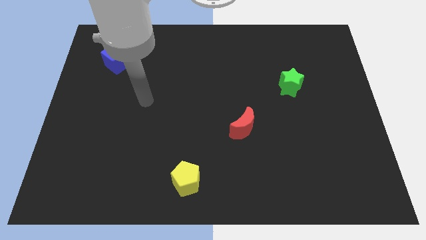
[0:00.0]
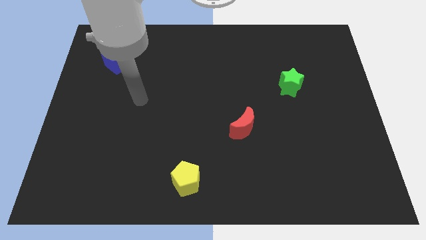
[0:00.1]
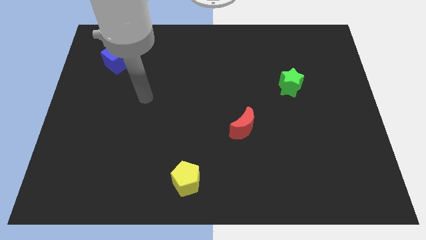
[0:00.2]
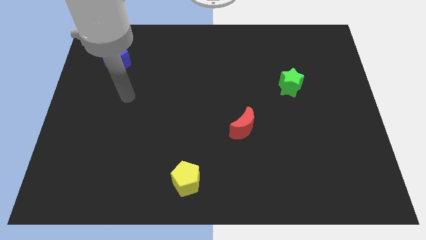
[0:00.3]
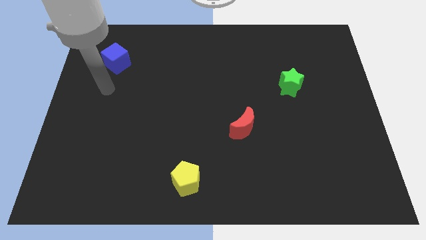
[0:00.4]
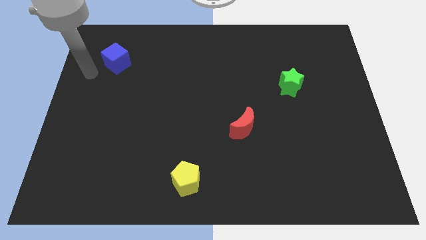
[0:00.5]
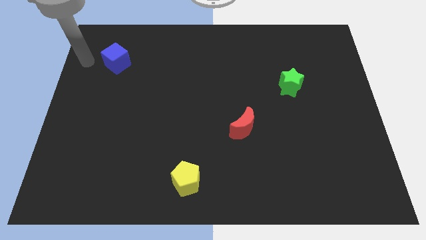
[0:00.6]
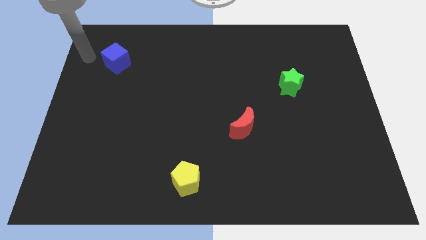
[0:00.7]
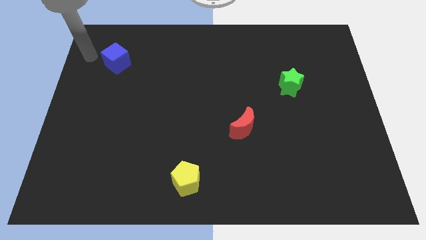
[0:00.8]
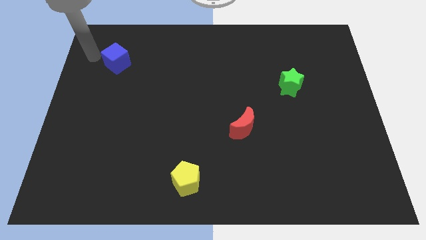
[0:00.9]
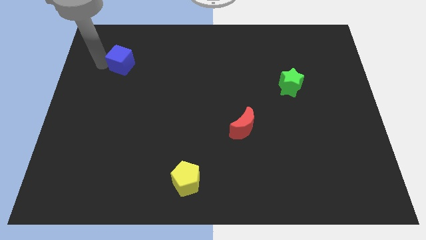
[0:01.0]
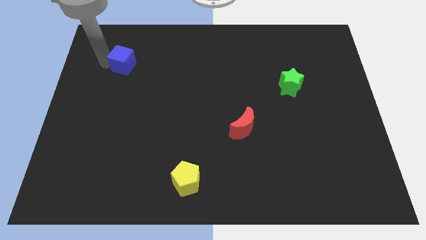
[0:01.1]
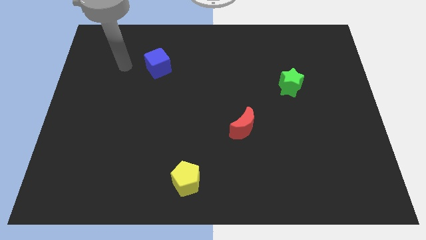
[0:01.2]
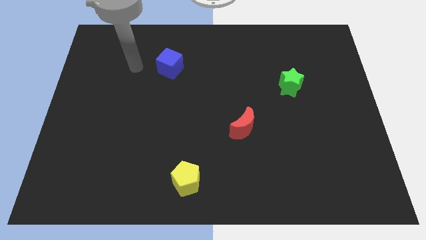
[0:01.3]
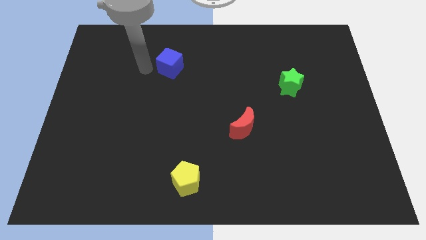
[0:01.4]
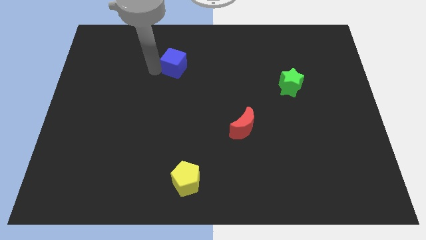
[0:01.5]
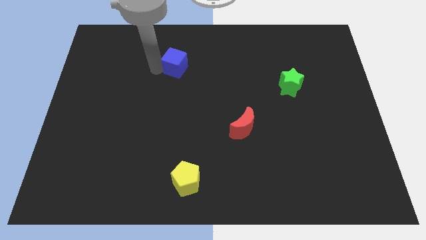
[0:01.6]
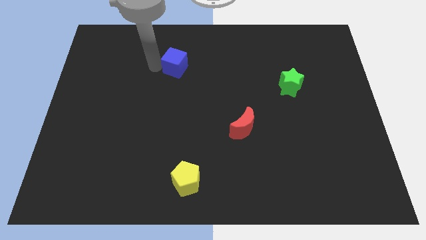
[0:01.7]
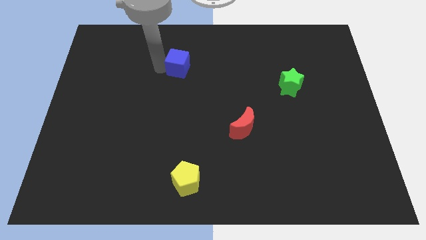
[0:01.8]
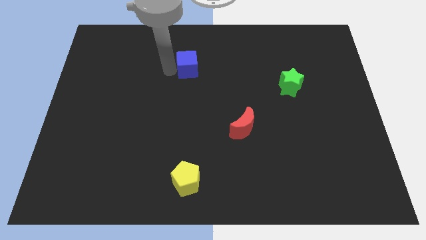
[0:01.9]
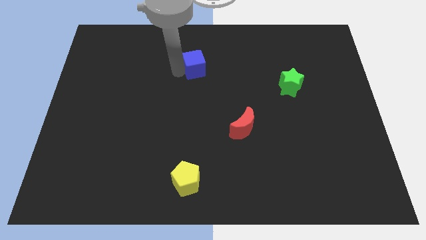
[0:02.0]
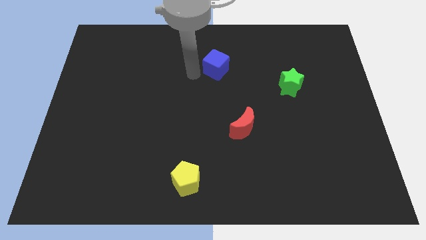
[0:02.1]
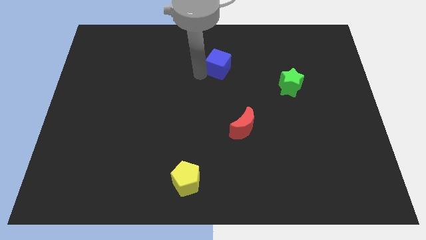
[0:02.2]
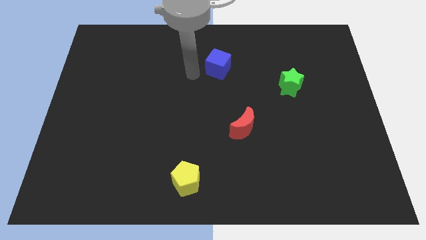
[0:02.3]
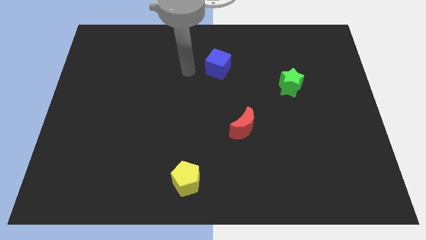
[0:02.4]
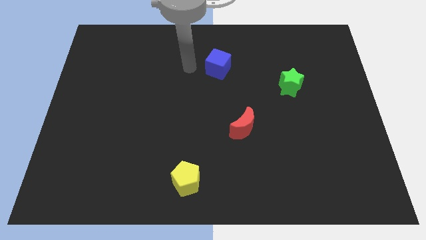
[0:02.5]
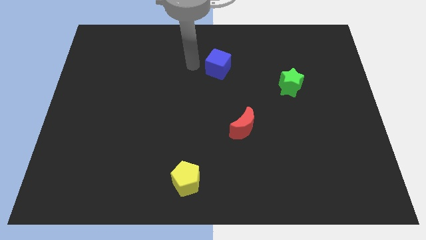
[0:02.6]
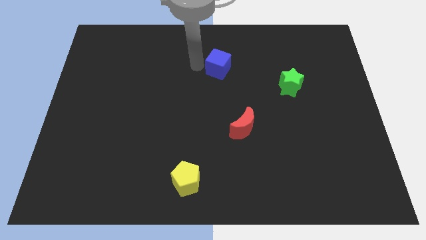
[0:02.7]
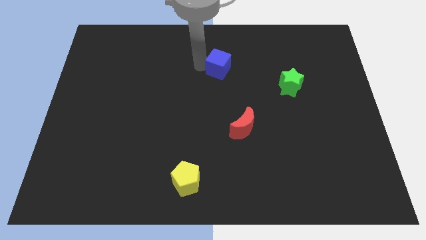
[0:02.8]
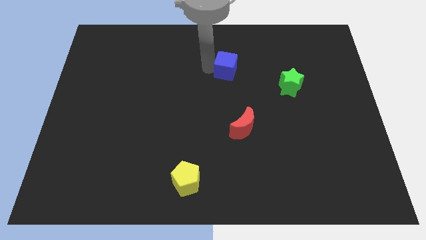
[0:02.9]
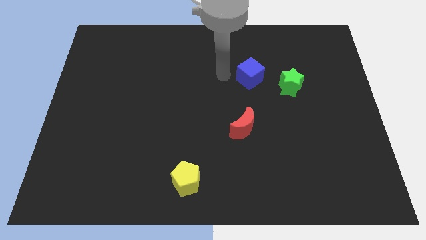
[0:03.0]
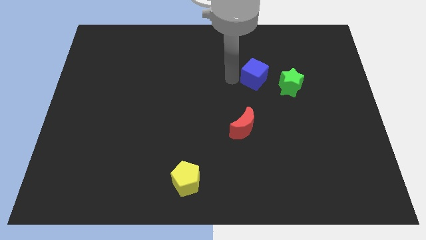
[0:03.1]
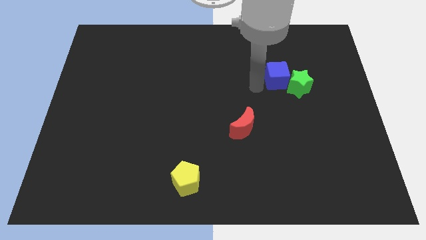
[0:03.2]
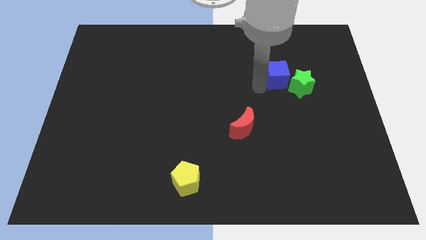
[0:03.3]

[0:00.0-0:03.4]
move the cube to the green star

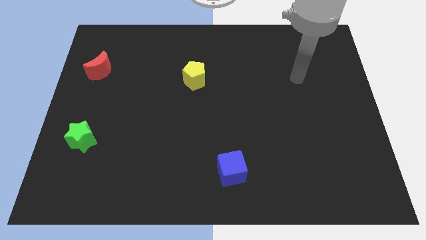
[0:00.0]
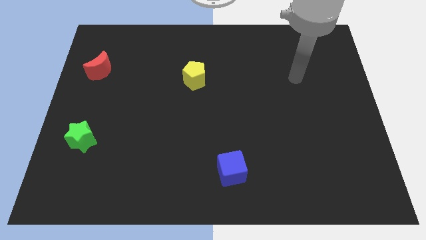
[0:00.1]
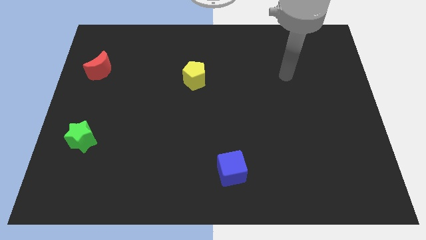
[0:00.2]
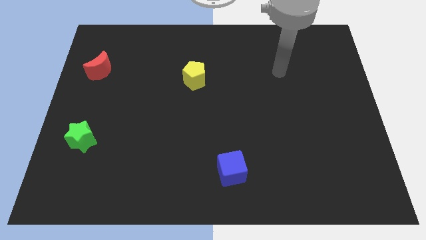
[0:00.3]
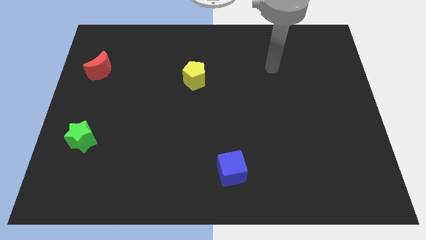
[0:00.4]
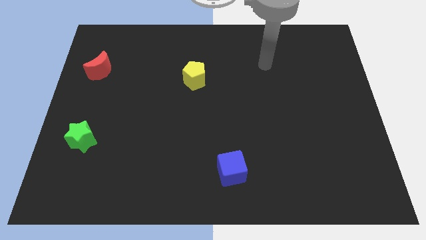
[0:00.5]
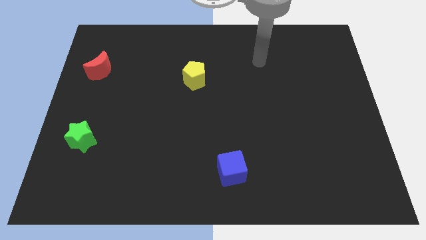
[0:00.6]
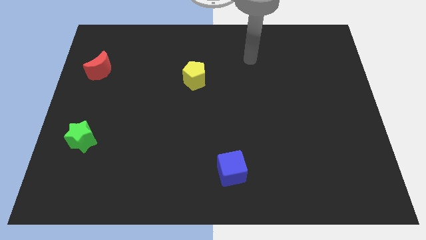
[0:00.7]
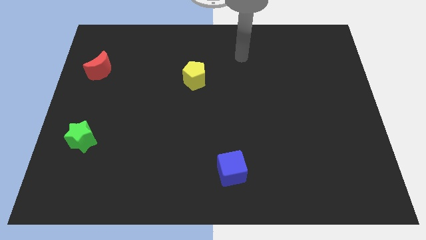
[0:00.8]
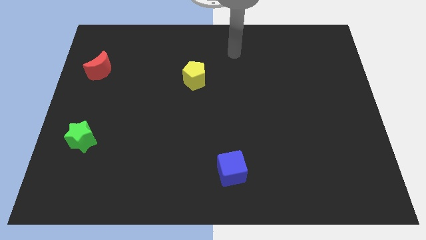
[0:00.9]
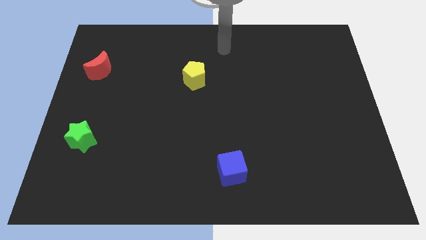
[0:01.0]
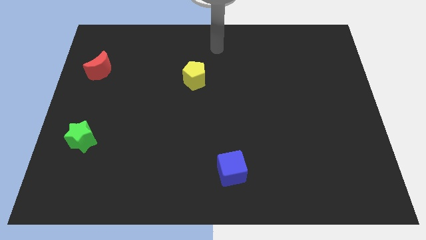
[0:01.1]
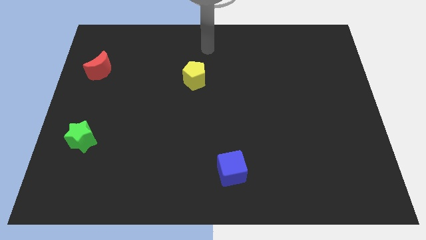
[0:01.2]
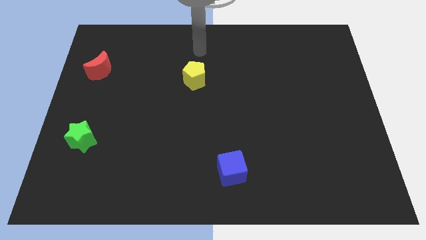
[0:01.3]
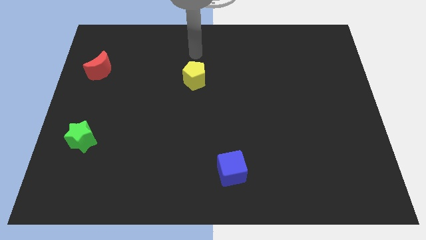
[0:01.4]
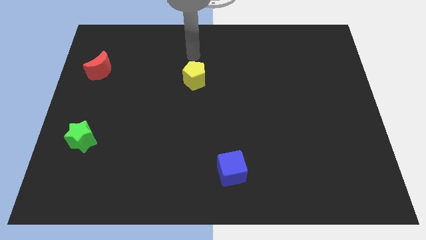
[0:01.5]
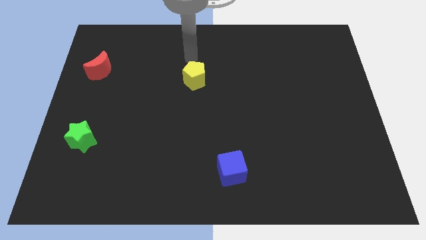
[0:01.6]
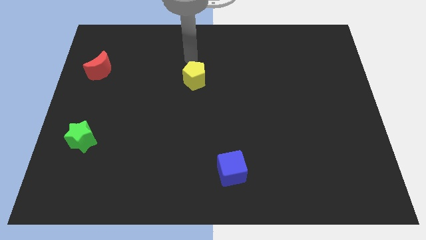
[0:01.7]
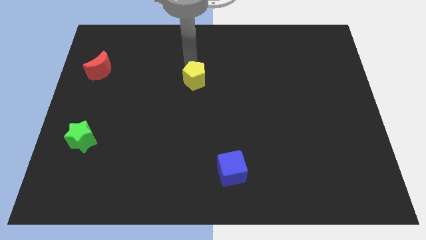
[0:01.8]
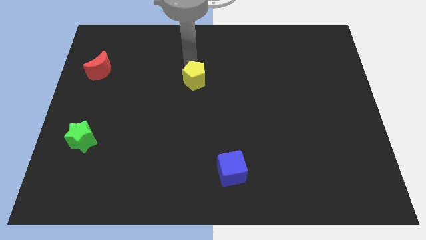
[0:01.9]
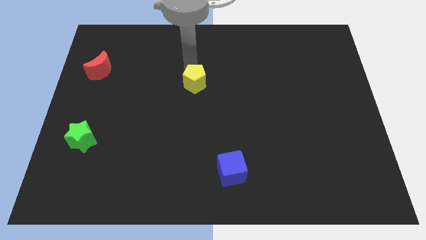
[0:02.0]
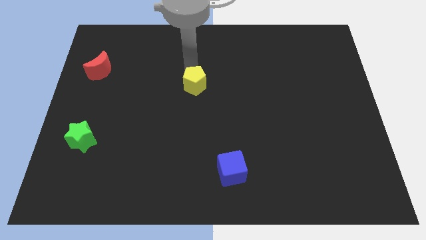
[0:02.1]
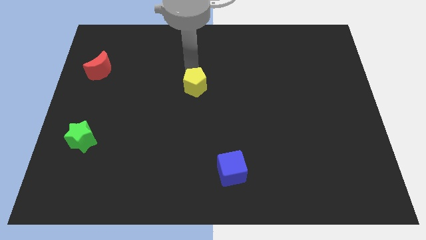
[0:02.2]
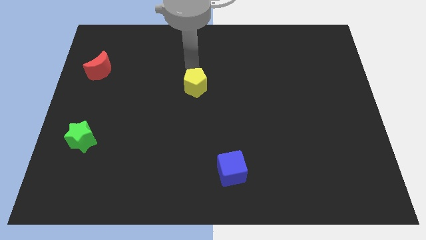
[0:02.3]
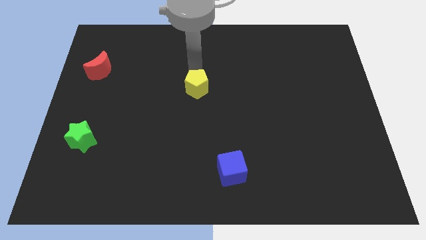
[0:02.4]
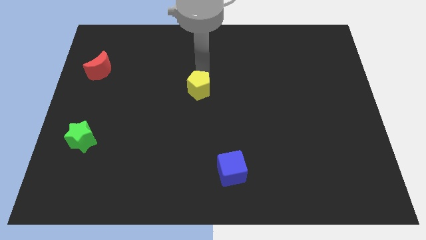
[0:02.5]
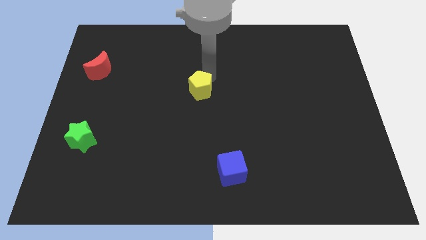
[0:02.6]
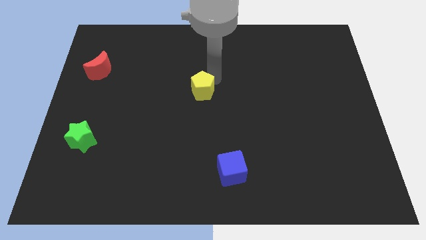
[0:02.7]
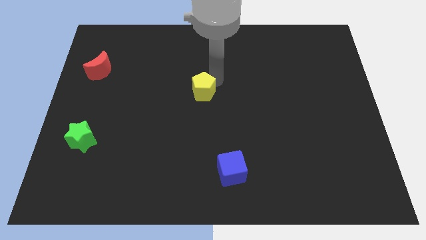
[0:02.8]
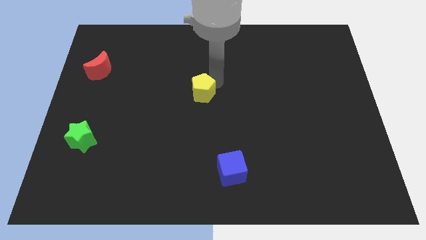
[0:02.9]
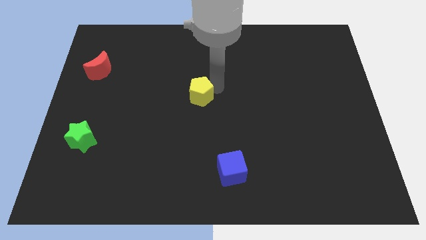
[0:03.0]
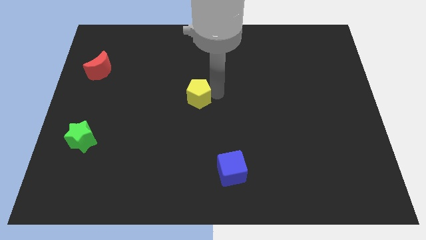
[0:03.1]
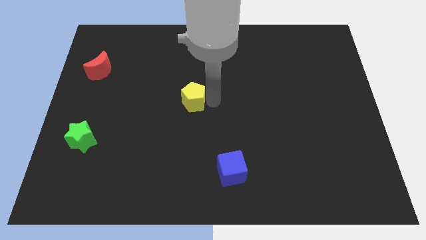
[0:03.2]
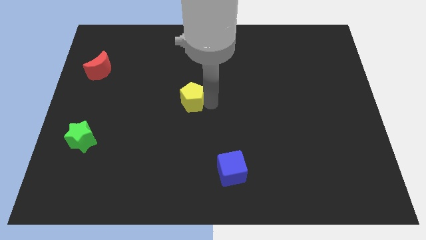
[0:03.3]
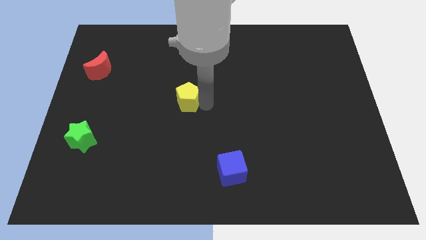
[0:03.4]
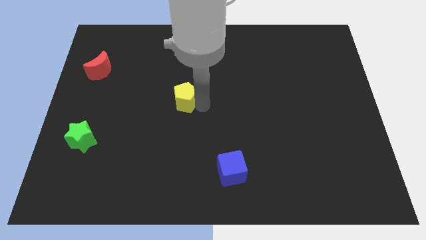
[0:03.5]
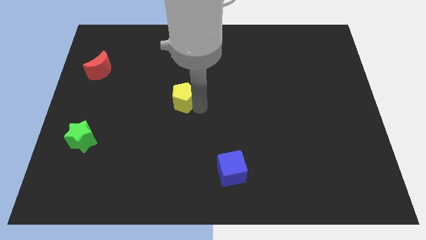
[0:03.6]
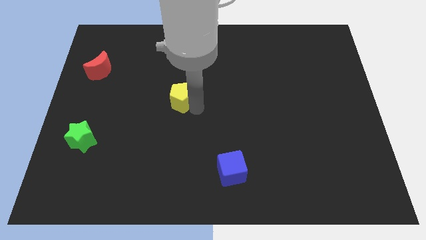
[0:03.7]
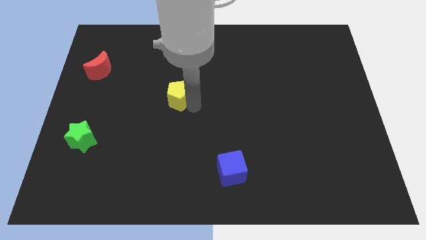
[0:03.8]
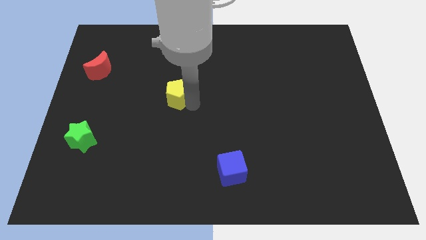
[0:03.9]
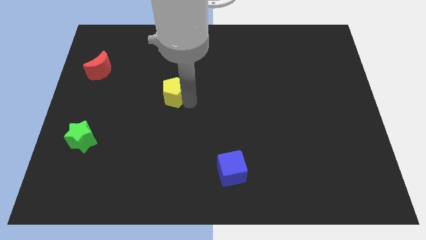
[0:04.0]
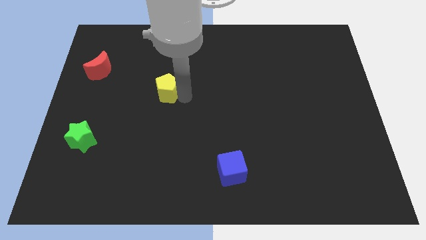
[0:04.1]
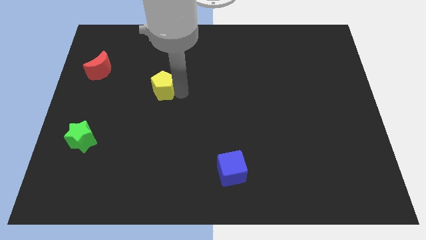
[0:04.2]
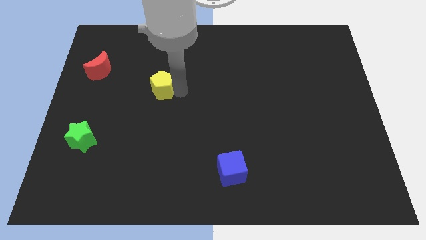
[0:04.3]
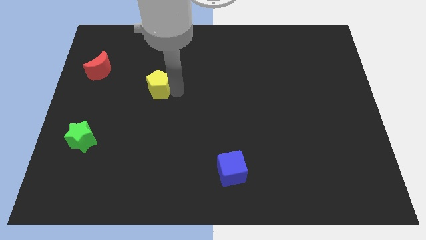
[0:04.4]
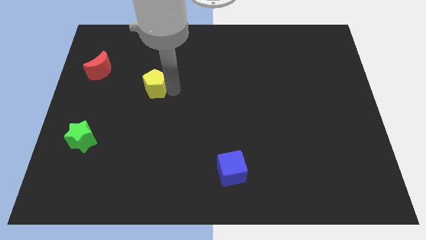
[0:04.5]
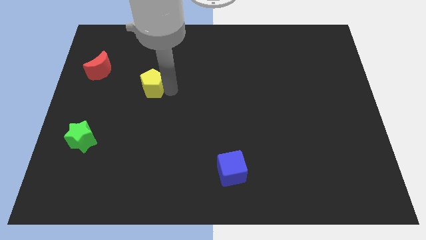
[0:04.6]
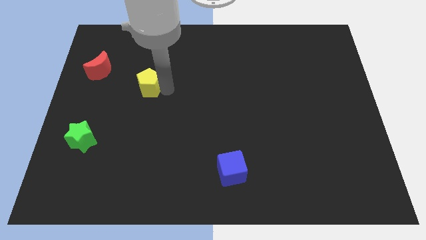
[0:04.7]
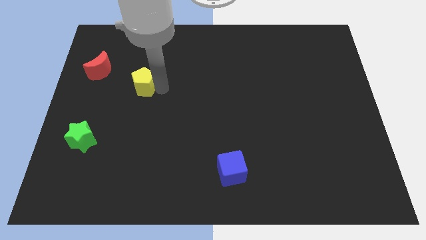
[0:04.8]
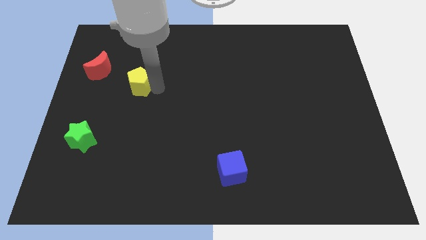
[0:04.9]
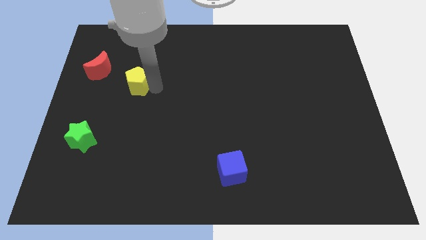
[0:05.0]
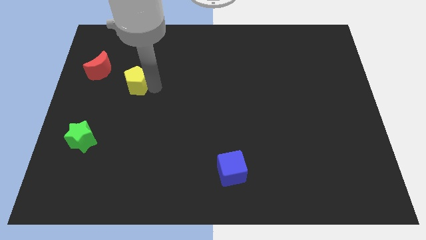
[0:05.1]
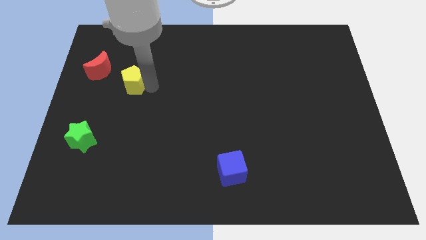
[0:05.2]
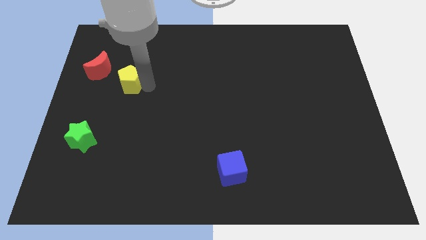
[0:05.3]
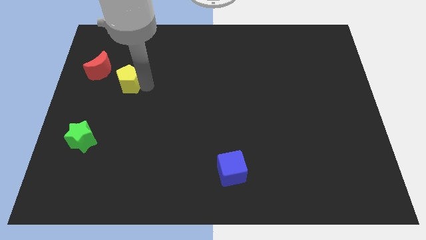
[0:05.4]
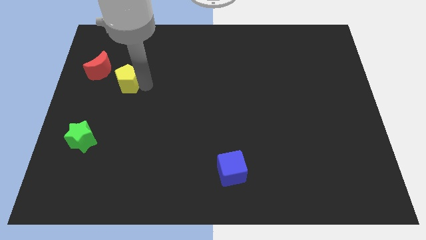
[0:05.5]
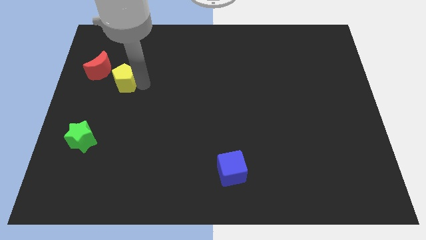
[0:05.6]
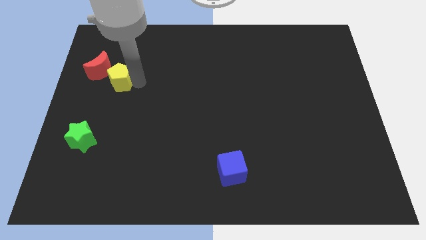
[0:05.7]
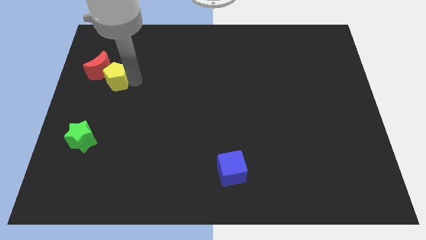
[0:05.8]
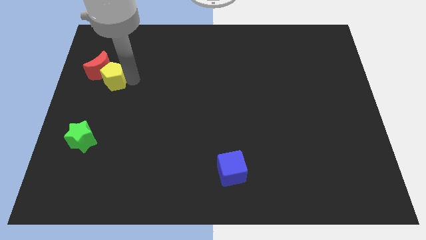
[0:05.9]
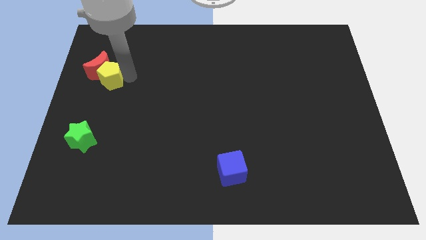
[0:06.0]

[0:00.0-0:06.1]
move the pentagon next to the red block
